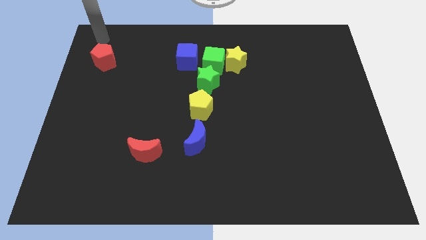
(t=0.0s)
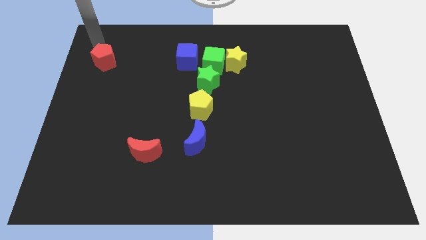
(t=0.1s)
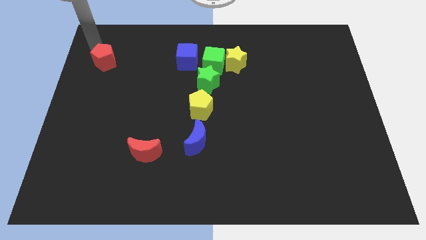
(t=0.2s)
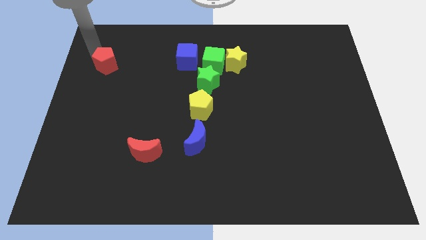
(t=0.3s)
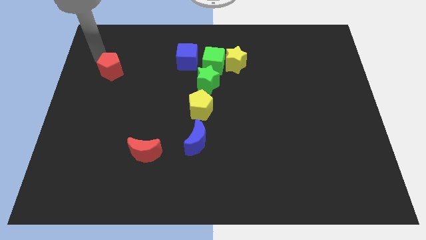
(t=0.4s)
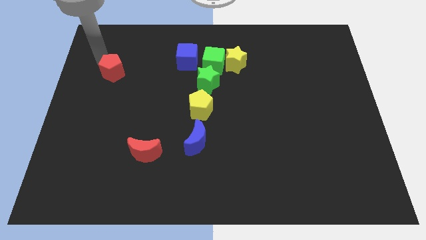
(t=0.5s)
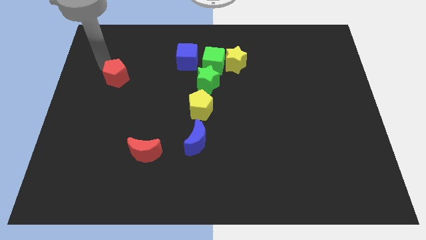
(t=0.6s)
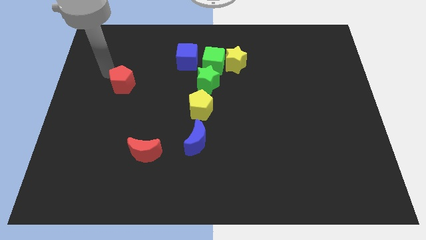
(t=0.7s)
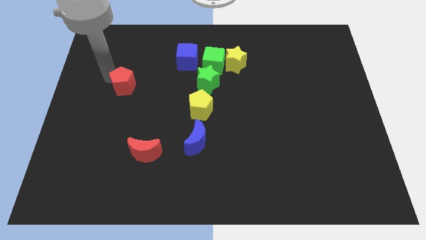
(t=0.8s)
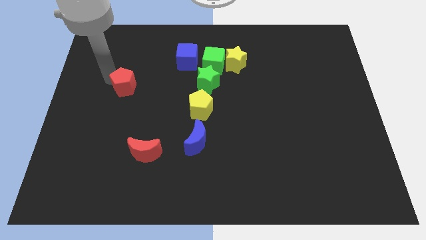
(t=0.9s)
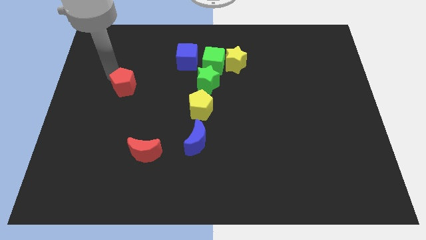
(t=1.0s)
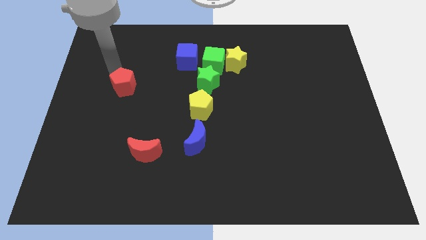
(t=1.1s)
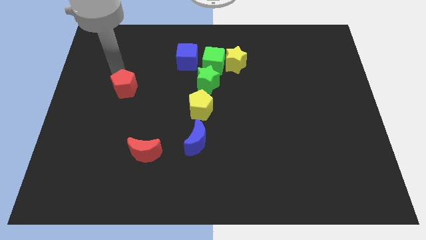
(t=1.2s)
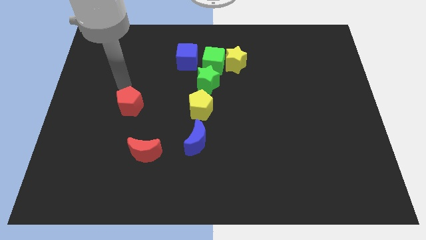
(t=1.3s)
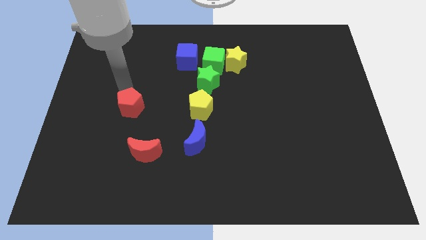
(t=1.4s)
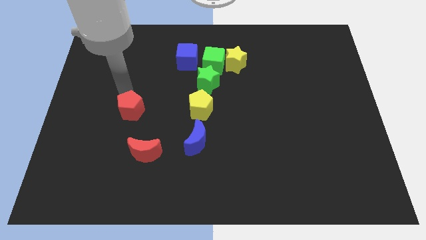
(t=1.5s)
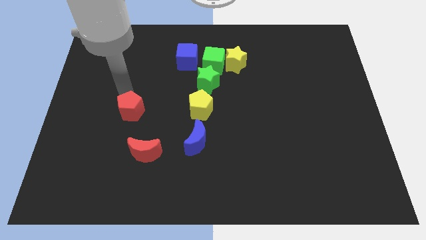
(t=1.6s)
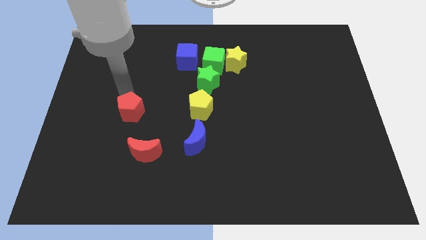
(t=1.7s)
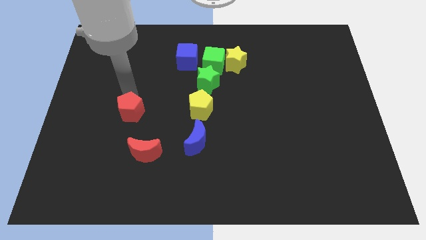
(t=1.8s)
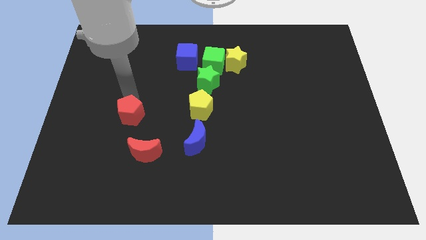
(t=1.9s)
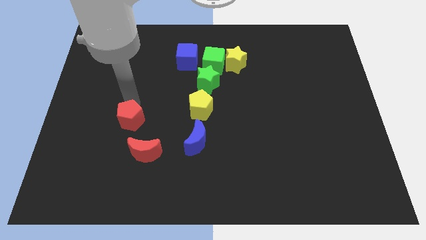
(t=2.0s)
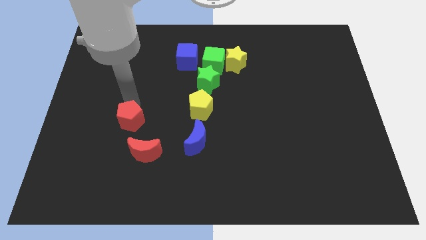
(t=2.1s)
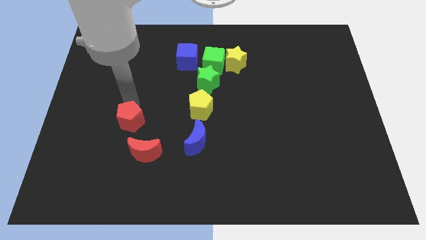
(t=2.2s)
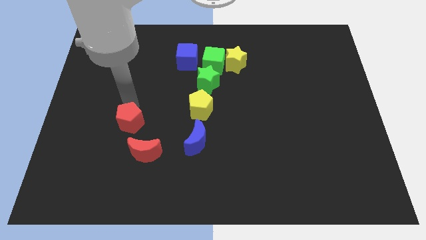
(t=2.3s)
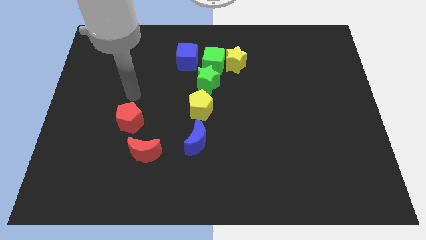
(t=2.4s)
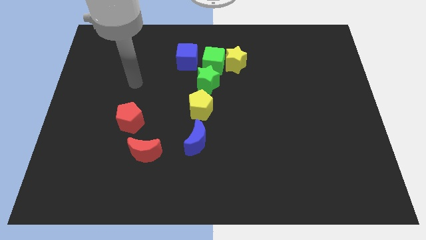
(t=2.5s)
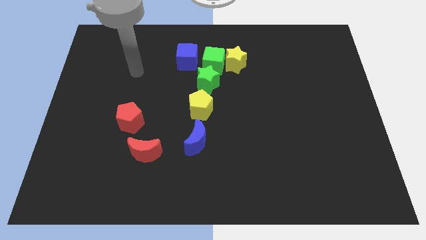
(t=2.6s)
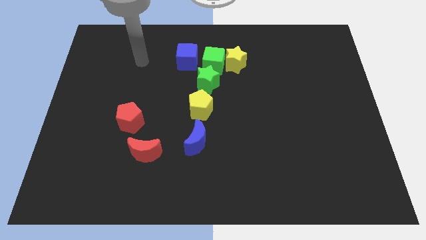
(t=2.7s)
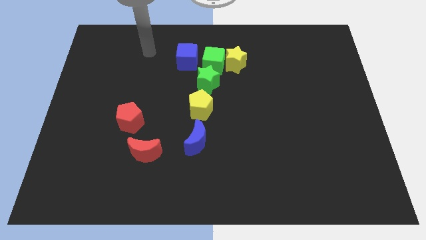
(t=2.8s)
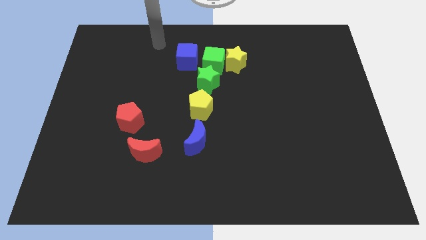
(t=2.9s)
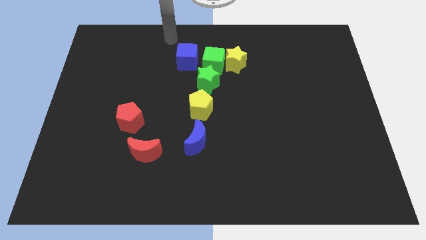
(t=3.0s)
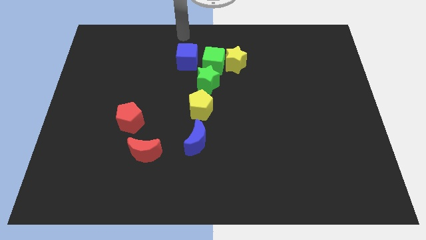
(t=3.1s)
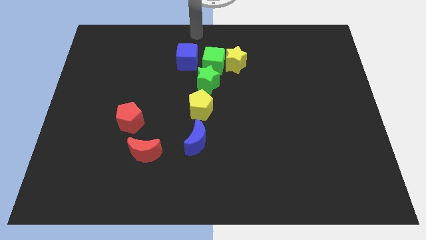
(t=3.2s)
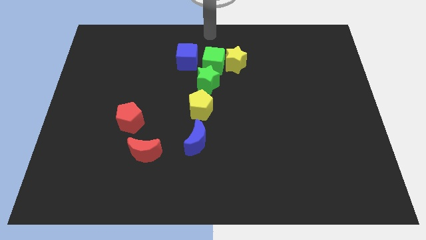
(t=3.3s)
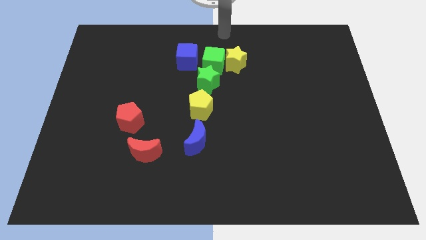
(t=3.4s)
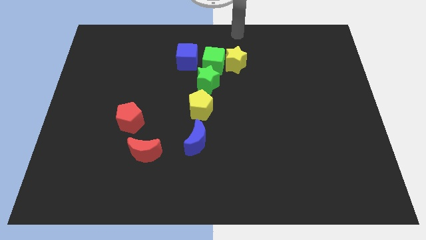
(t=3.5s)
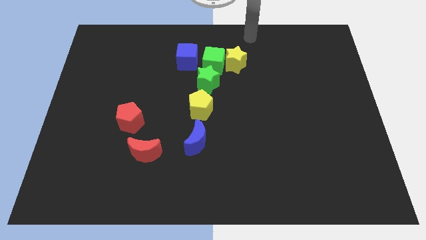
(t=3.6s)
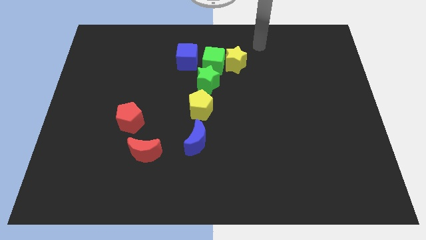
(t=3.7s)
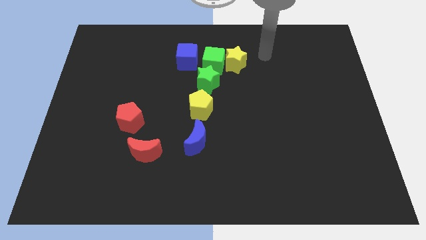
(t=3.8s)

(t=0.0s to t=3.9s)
push the red pentagon towards the bottom right

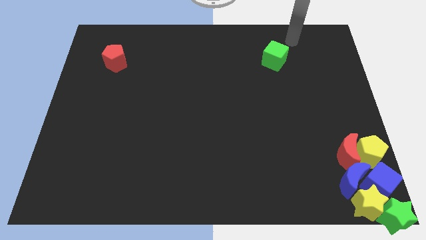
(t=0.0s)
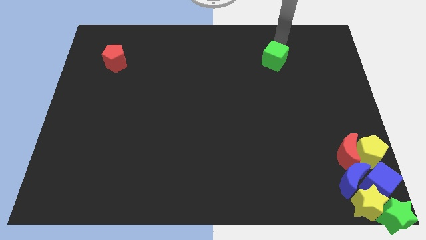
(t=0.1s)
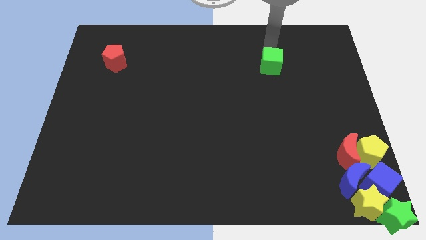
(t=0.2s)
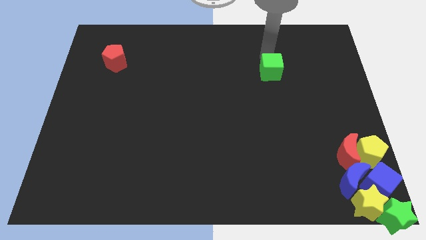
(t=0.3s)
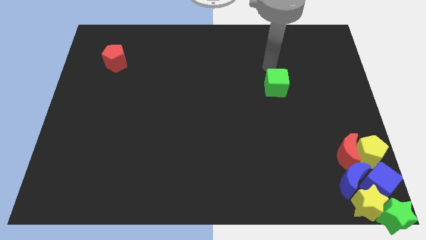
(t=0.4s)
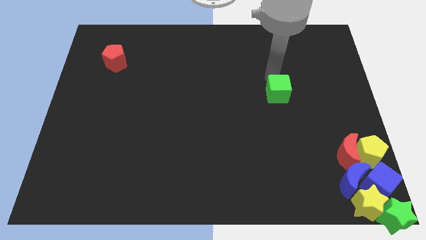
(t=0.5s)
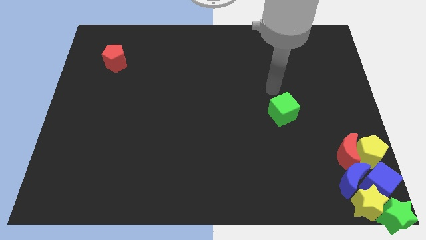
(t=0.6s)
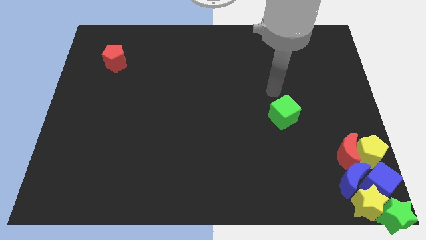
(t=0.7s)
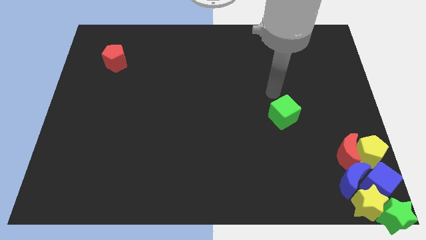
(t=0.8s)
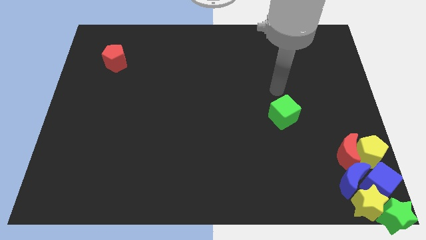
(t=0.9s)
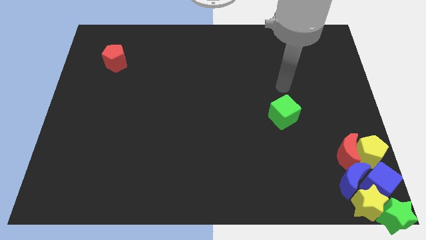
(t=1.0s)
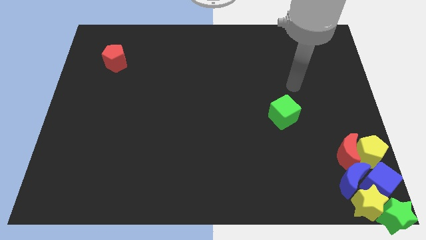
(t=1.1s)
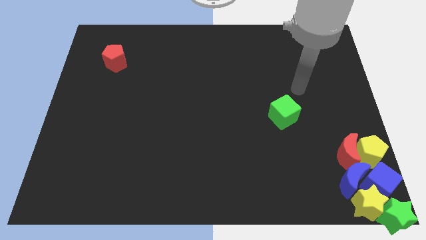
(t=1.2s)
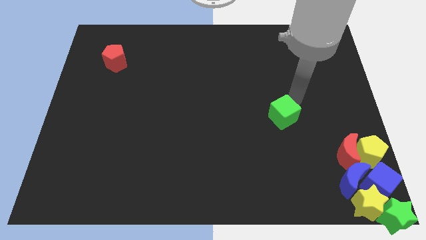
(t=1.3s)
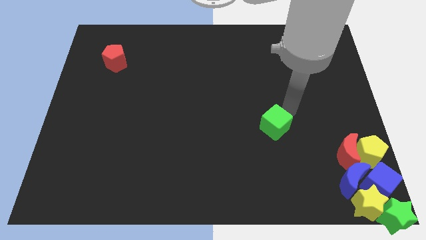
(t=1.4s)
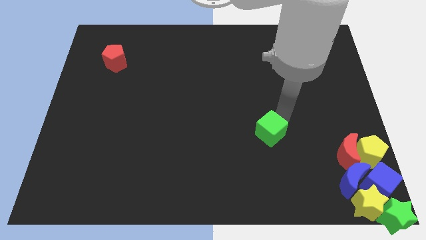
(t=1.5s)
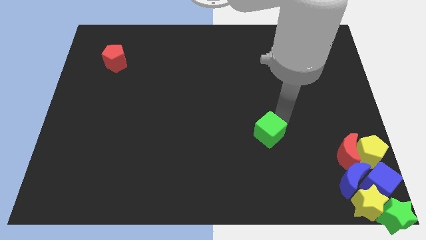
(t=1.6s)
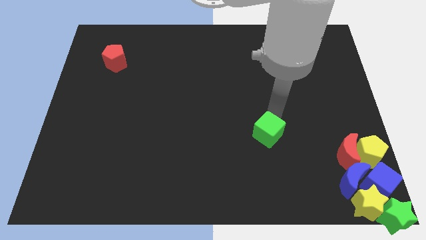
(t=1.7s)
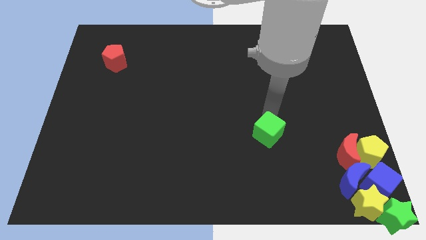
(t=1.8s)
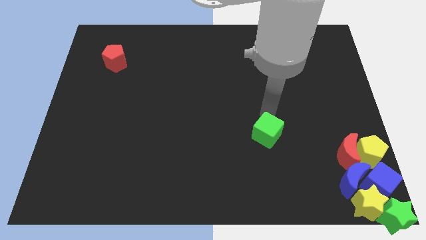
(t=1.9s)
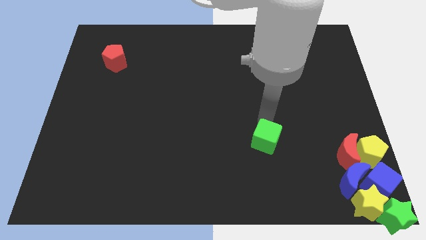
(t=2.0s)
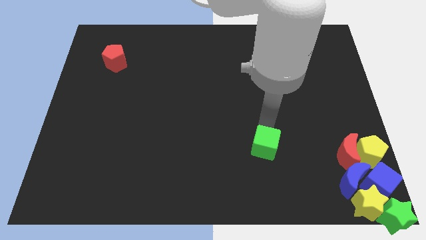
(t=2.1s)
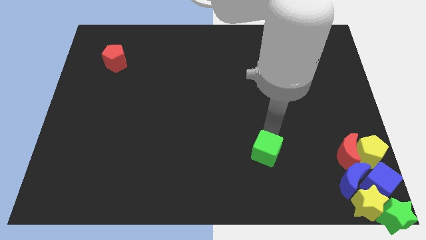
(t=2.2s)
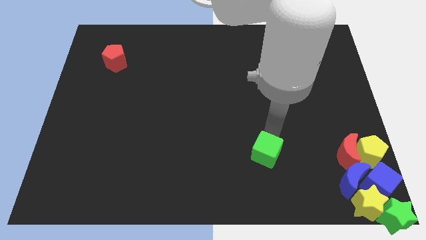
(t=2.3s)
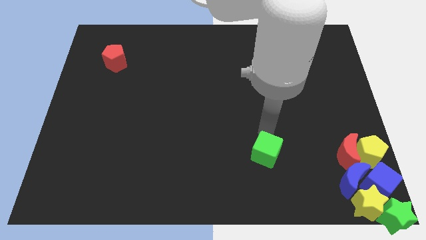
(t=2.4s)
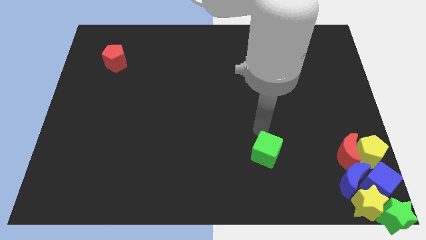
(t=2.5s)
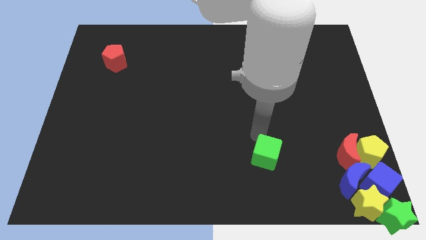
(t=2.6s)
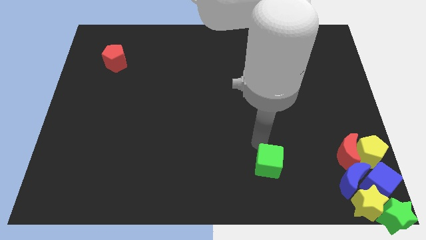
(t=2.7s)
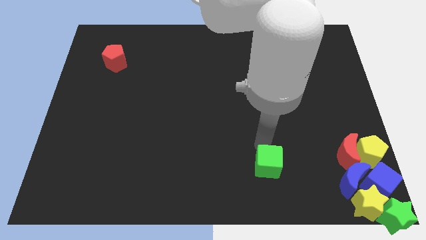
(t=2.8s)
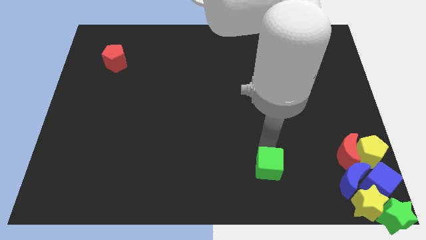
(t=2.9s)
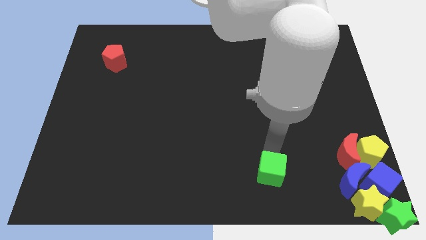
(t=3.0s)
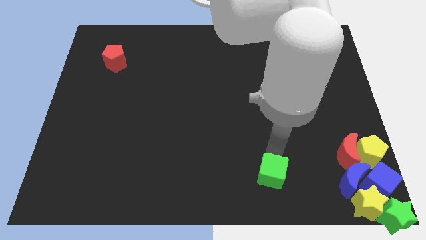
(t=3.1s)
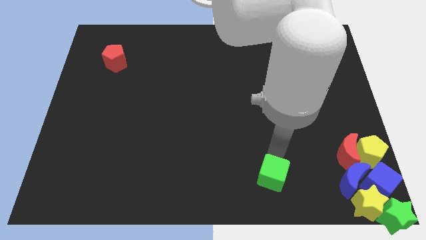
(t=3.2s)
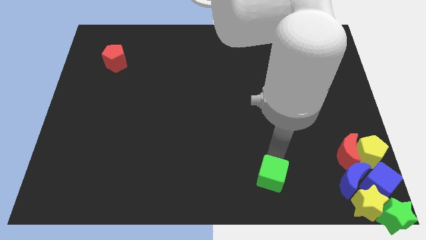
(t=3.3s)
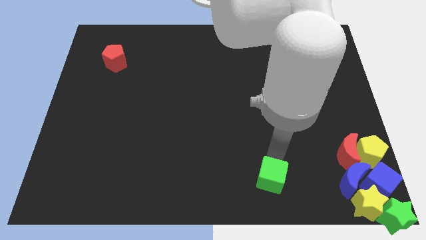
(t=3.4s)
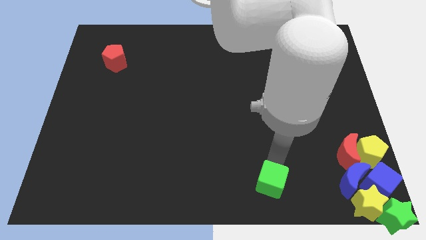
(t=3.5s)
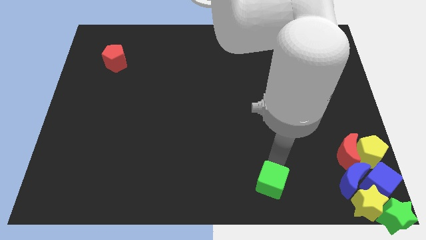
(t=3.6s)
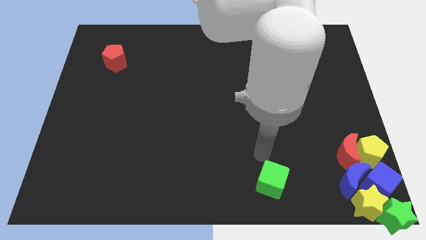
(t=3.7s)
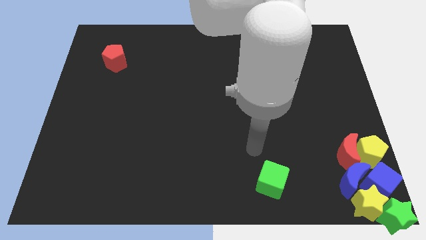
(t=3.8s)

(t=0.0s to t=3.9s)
slide the green cube horizontally to the left side of the blue moon

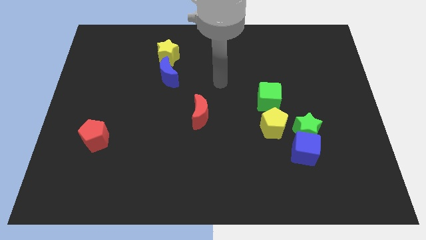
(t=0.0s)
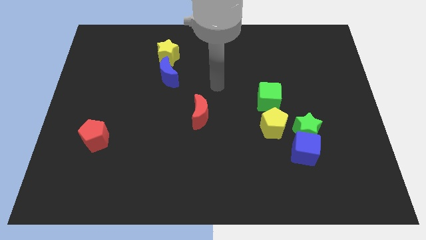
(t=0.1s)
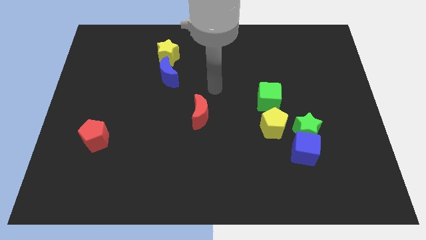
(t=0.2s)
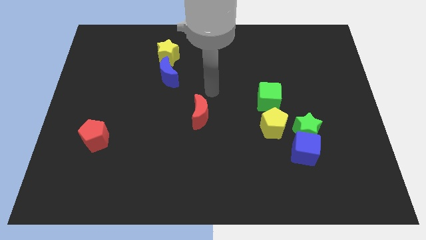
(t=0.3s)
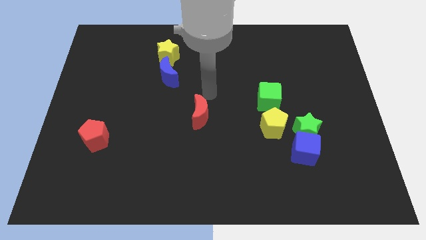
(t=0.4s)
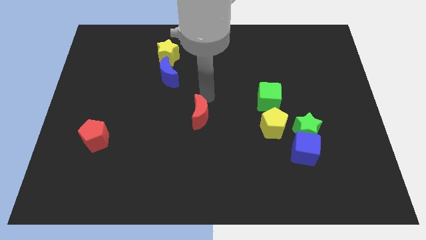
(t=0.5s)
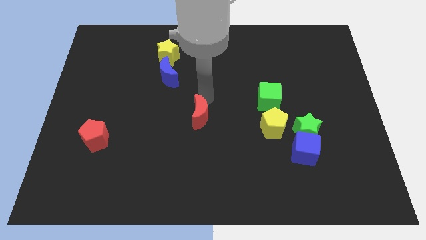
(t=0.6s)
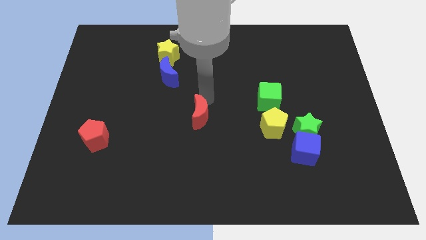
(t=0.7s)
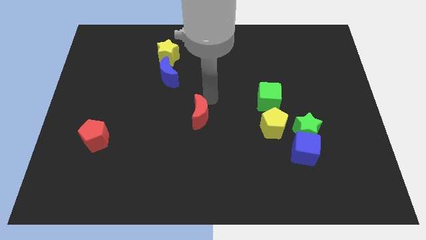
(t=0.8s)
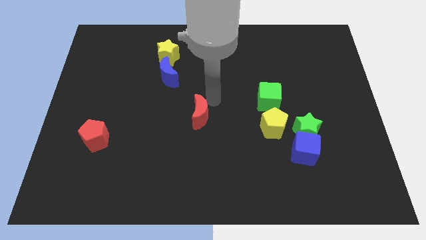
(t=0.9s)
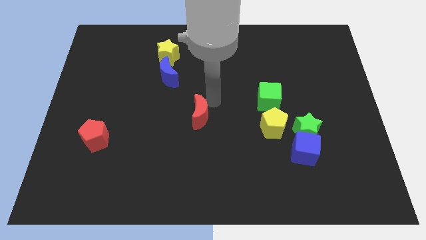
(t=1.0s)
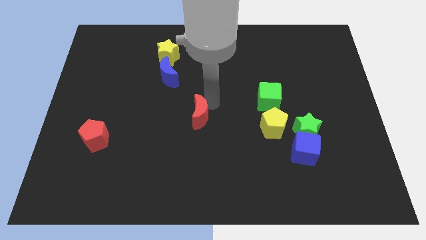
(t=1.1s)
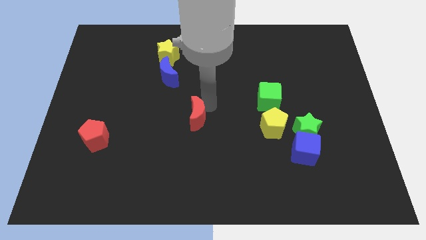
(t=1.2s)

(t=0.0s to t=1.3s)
point your arm at the right of the red crescent
